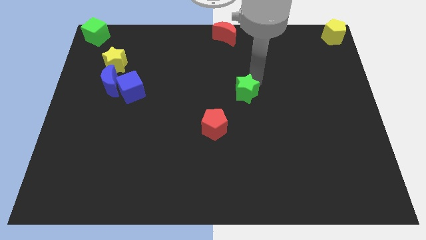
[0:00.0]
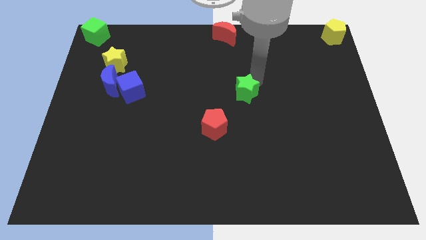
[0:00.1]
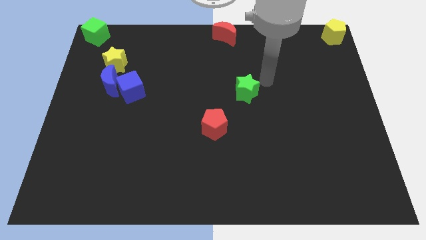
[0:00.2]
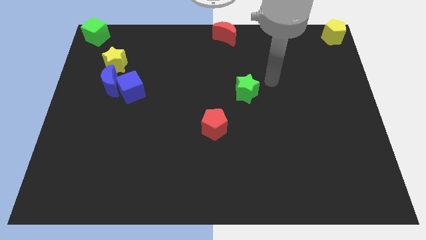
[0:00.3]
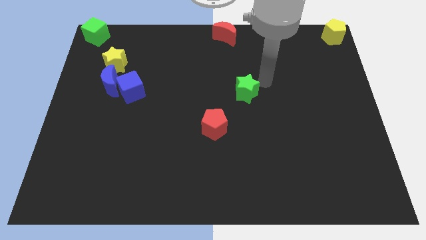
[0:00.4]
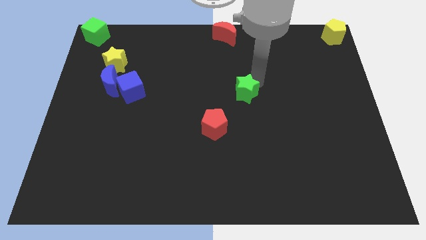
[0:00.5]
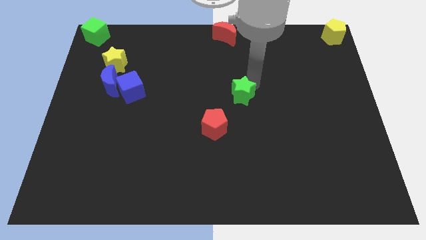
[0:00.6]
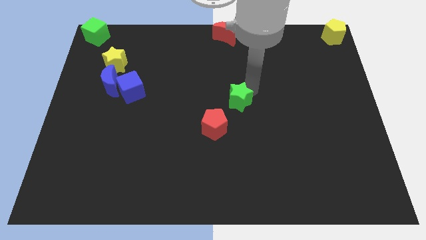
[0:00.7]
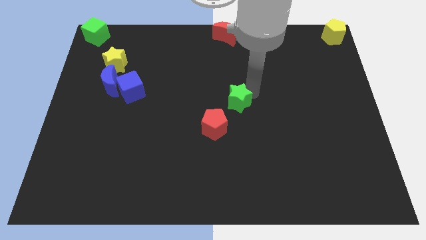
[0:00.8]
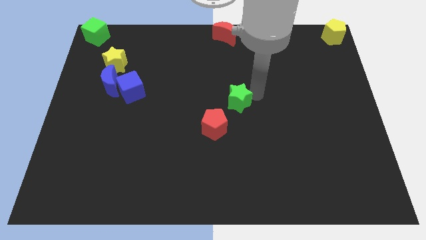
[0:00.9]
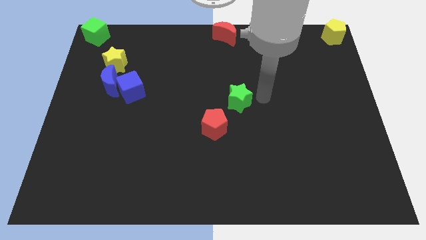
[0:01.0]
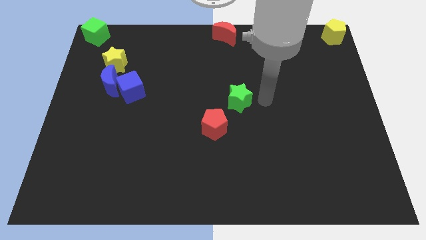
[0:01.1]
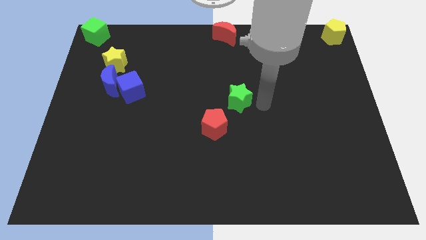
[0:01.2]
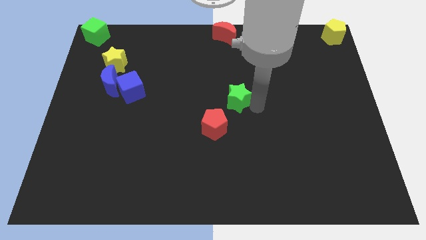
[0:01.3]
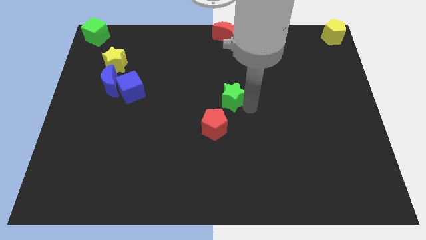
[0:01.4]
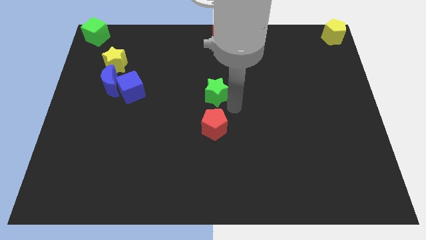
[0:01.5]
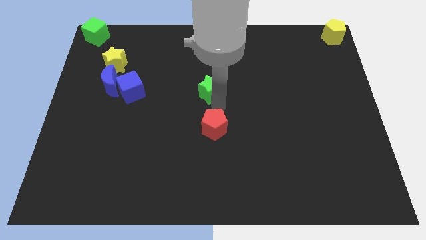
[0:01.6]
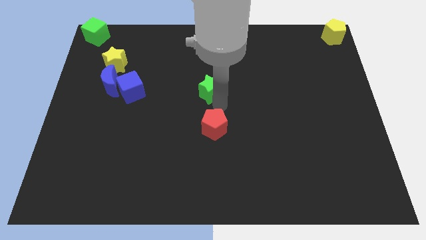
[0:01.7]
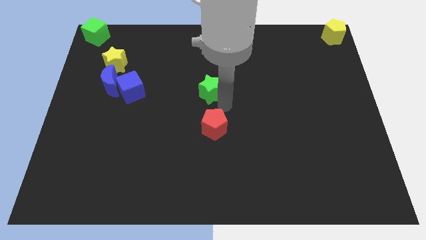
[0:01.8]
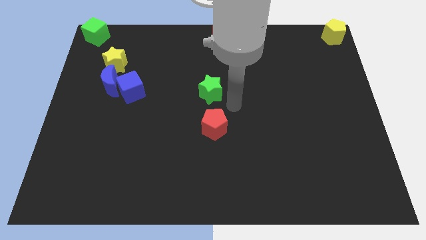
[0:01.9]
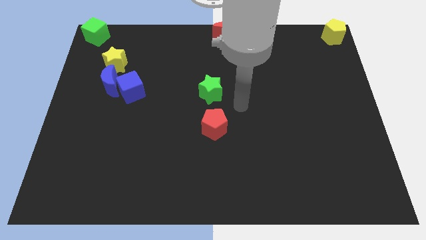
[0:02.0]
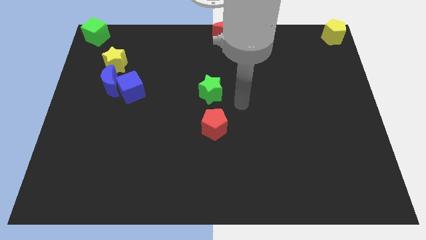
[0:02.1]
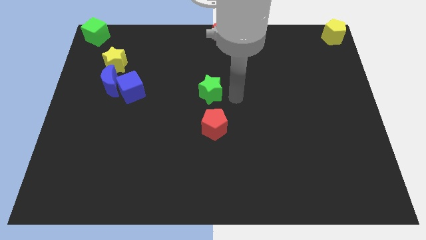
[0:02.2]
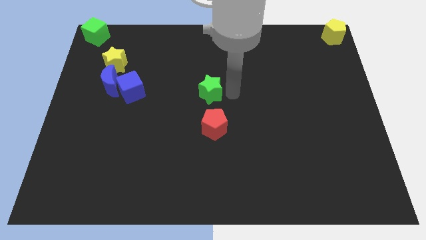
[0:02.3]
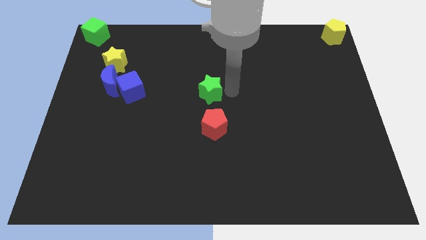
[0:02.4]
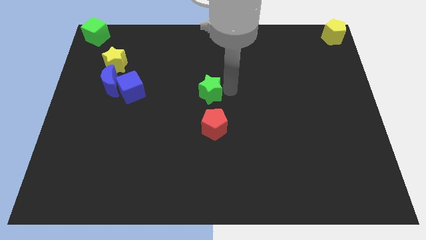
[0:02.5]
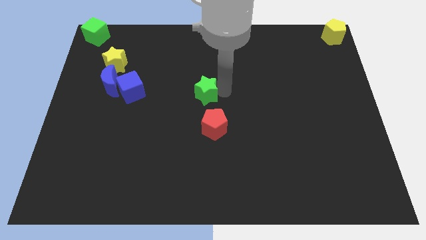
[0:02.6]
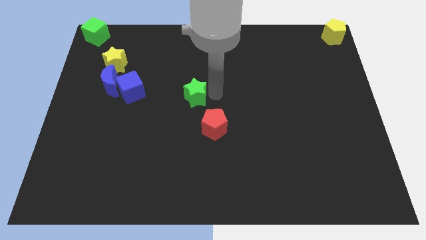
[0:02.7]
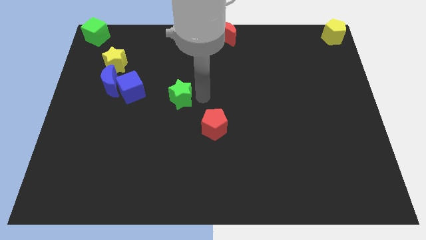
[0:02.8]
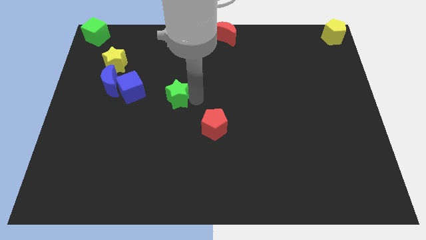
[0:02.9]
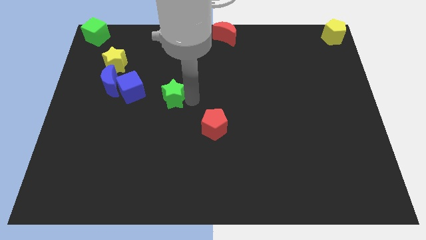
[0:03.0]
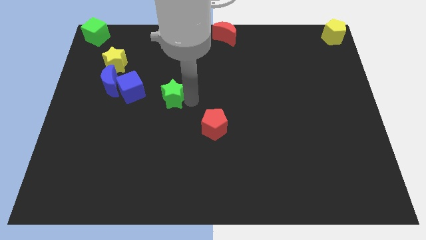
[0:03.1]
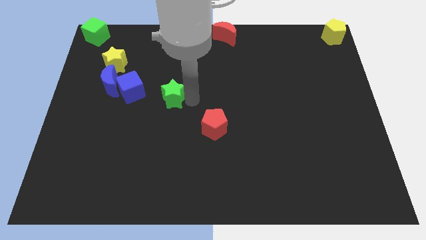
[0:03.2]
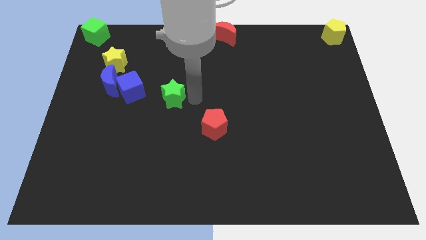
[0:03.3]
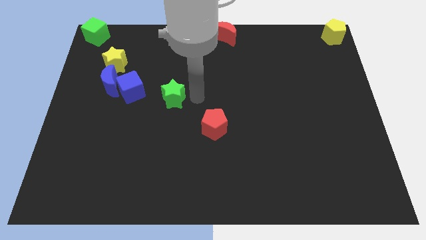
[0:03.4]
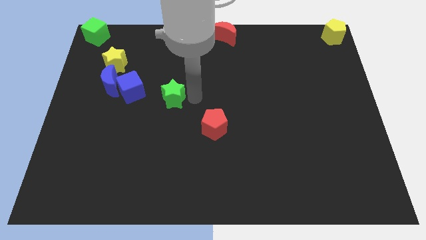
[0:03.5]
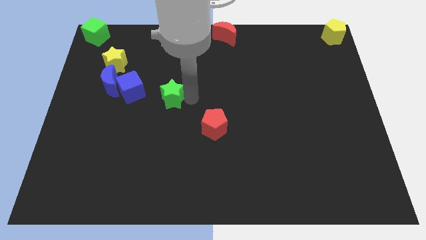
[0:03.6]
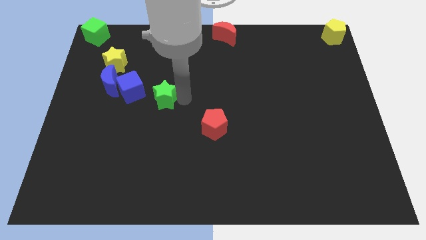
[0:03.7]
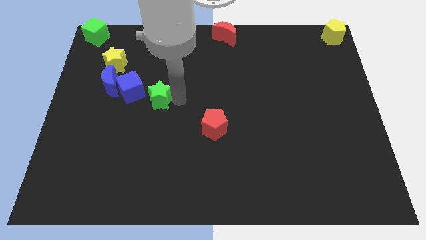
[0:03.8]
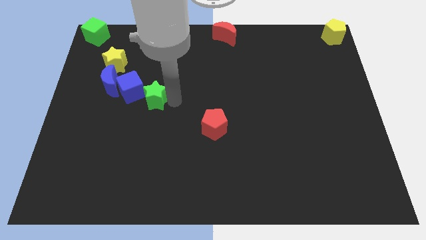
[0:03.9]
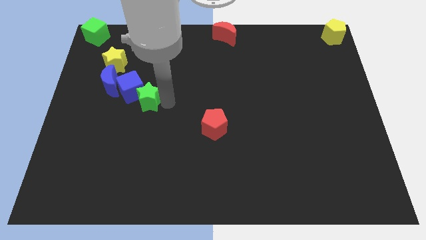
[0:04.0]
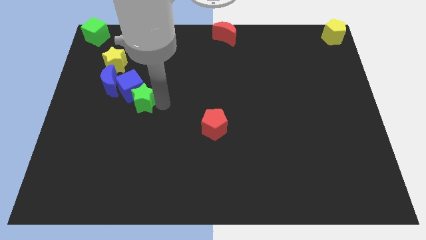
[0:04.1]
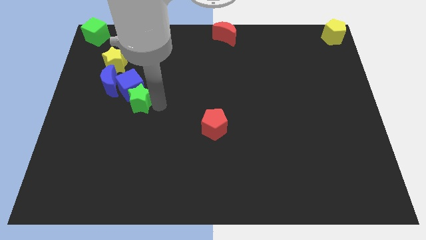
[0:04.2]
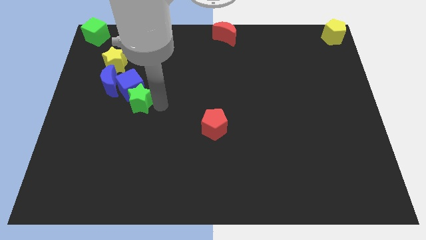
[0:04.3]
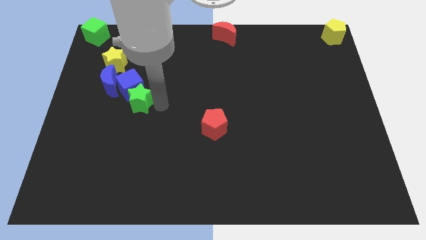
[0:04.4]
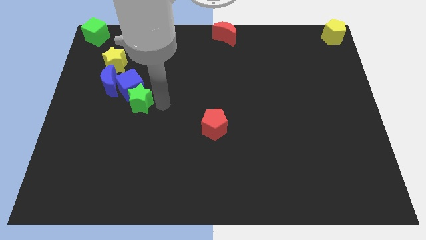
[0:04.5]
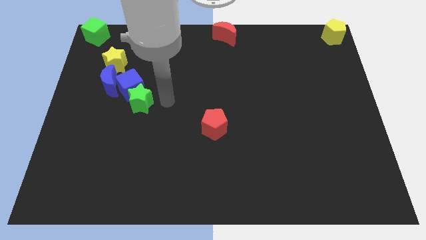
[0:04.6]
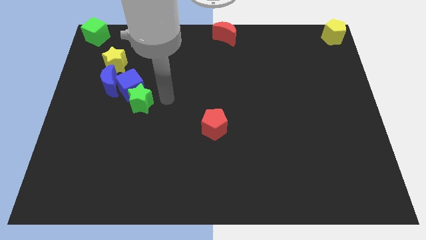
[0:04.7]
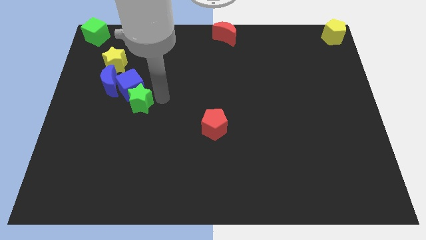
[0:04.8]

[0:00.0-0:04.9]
push the green star into the blue cube

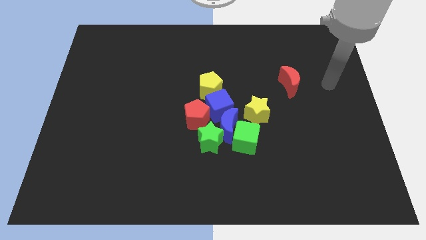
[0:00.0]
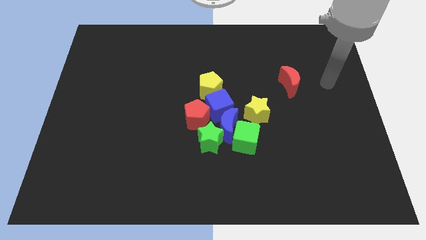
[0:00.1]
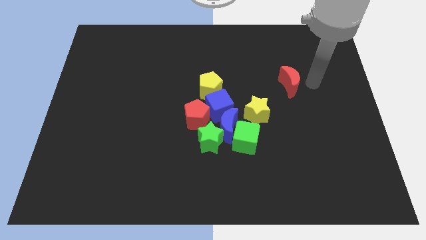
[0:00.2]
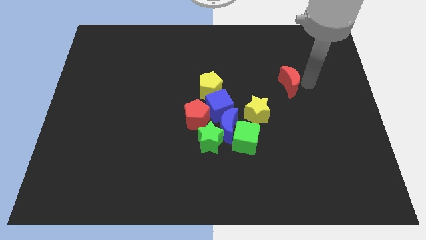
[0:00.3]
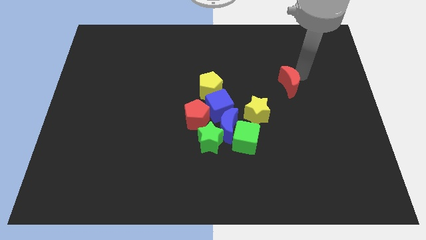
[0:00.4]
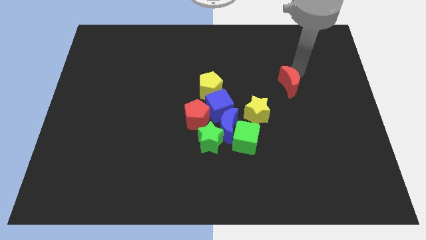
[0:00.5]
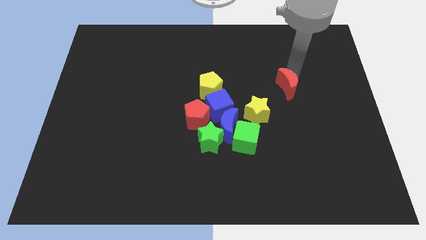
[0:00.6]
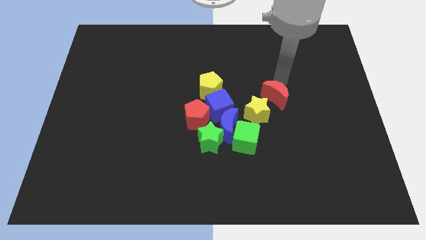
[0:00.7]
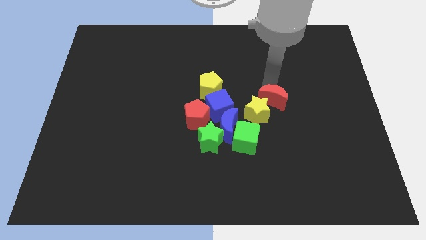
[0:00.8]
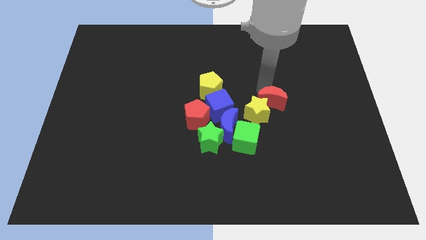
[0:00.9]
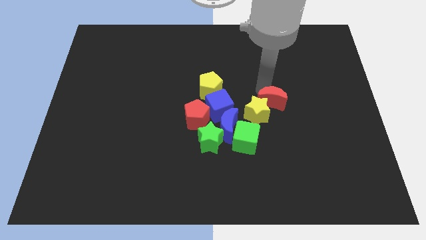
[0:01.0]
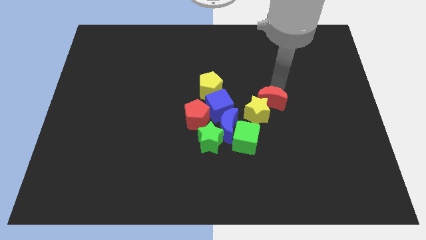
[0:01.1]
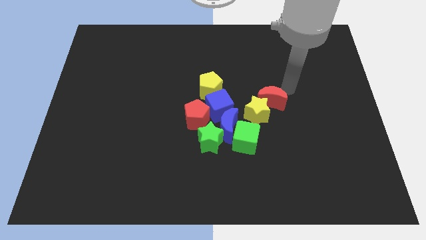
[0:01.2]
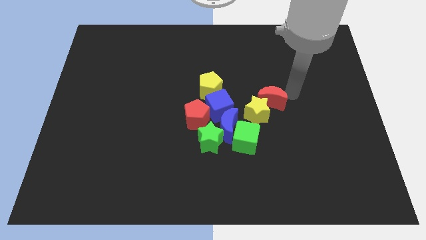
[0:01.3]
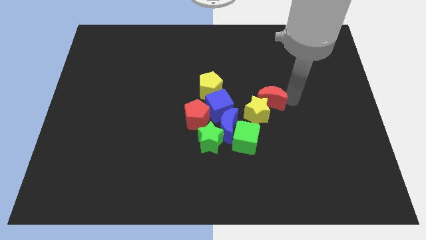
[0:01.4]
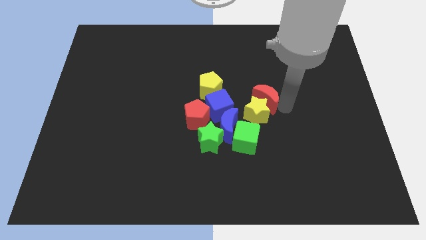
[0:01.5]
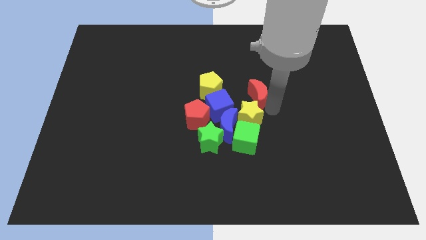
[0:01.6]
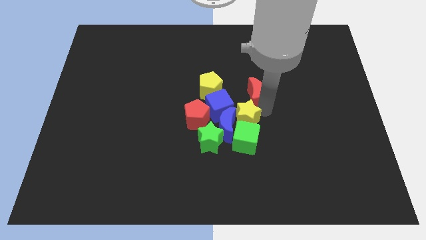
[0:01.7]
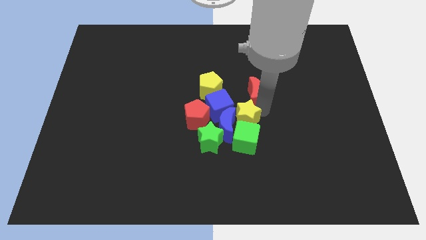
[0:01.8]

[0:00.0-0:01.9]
place the red moon above the yellow star

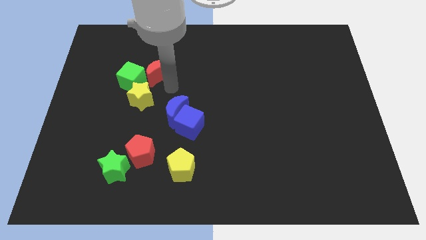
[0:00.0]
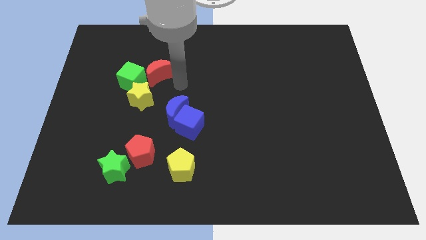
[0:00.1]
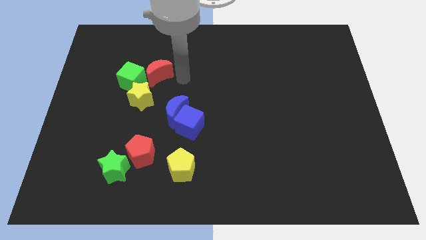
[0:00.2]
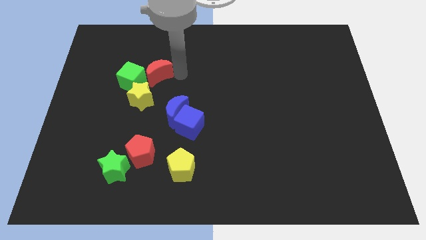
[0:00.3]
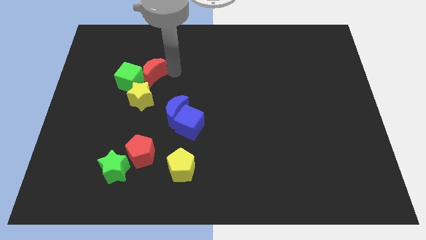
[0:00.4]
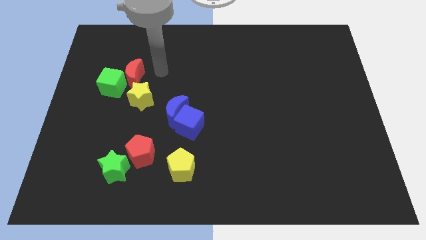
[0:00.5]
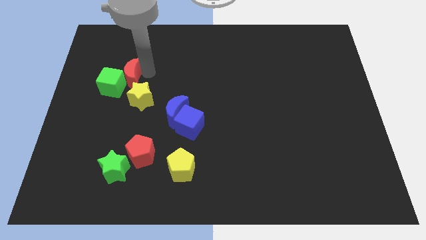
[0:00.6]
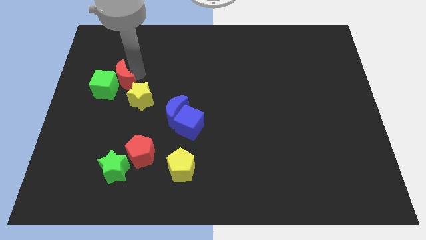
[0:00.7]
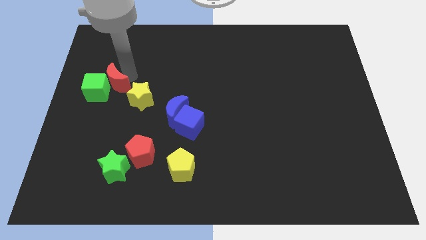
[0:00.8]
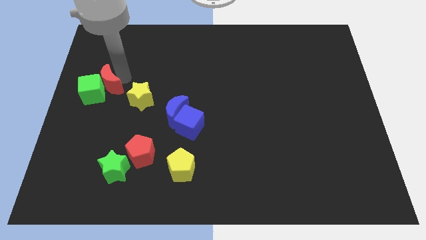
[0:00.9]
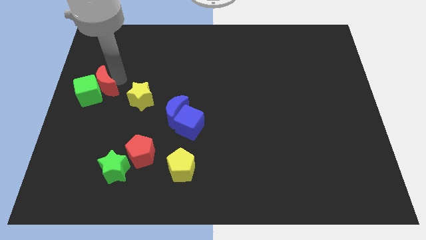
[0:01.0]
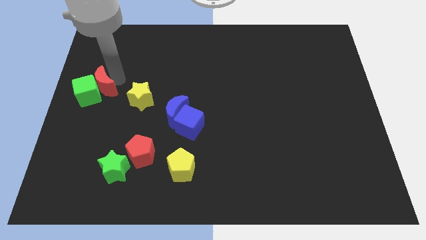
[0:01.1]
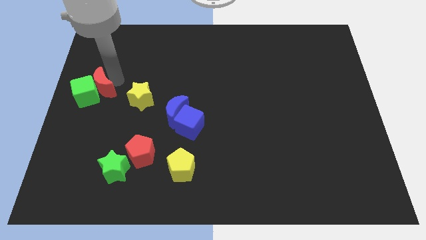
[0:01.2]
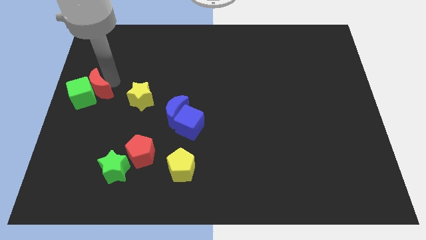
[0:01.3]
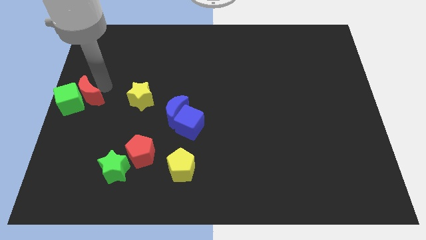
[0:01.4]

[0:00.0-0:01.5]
push the red moon into the green star

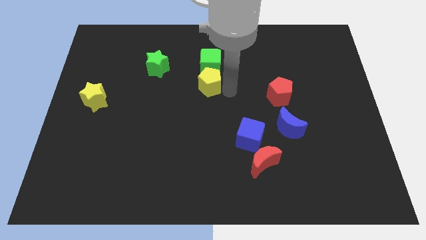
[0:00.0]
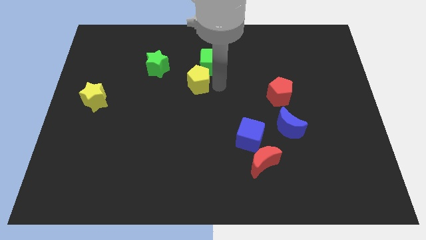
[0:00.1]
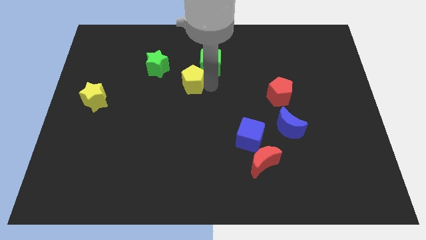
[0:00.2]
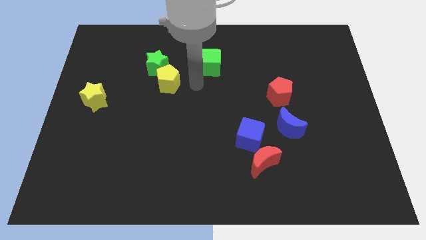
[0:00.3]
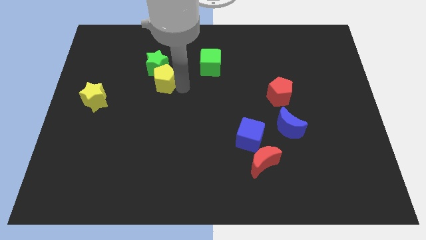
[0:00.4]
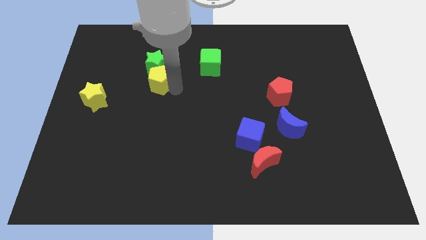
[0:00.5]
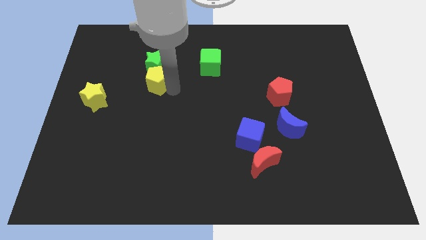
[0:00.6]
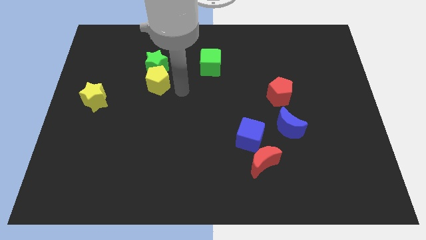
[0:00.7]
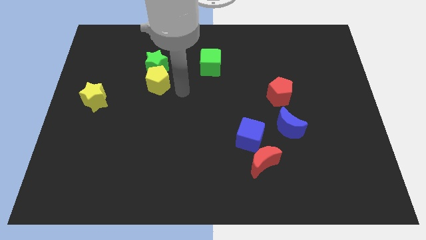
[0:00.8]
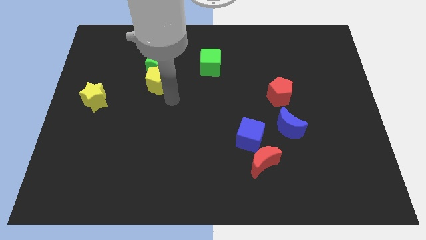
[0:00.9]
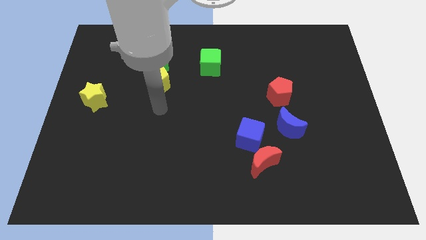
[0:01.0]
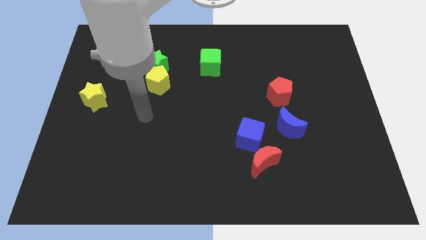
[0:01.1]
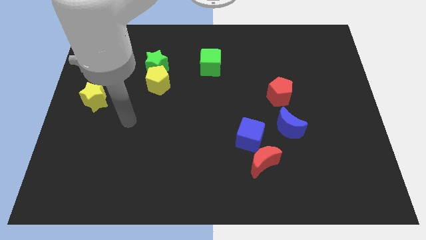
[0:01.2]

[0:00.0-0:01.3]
place the yellow pentagon below the green star
